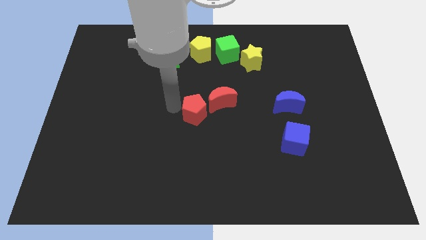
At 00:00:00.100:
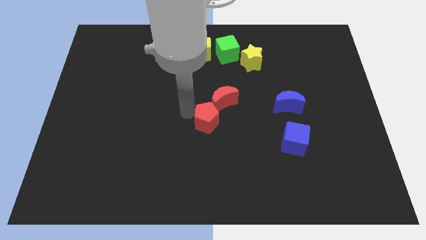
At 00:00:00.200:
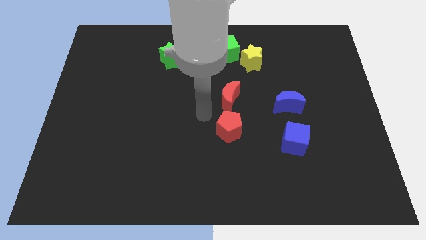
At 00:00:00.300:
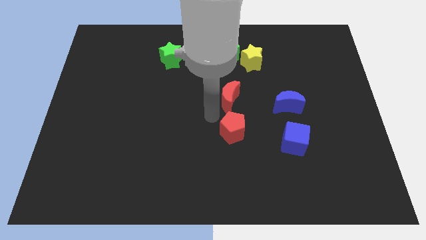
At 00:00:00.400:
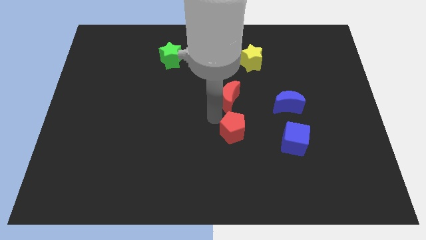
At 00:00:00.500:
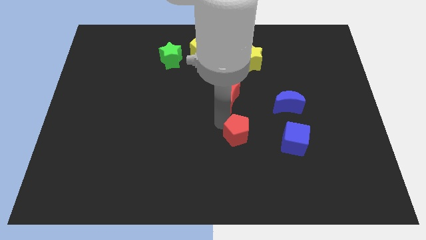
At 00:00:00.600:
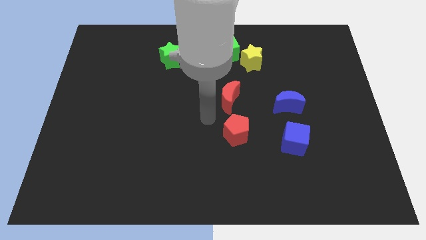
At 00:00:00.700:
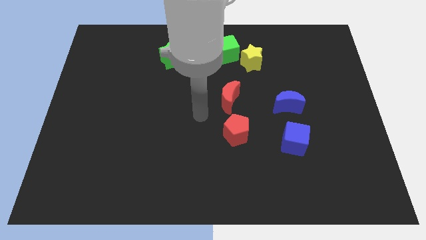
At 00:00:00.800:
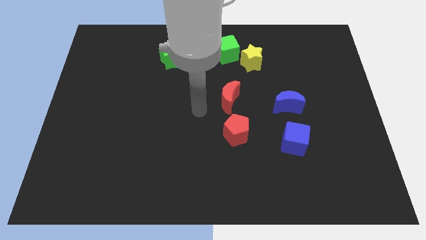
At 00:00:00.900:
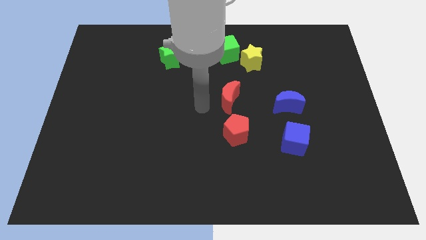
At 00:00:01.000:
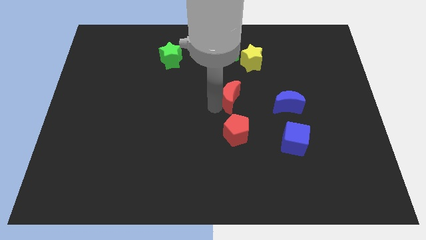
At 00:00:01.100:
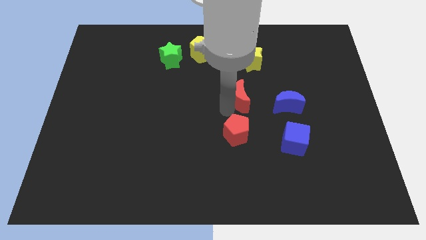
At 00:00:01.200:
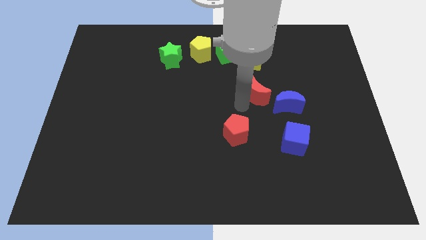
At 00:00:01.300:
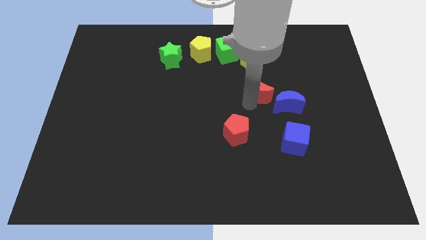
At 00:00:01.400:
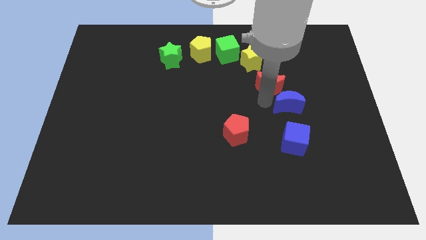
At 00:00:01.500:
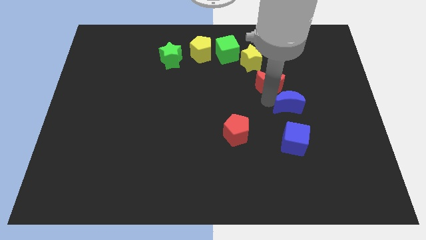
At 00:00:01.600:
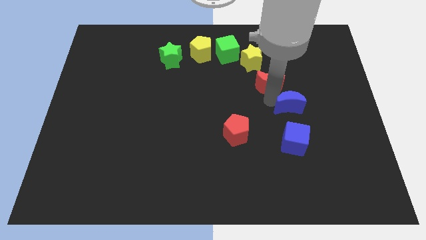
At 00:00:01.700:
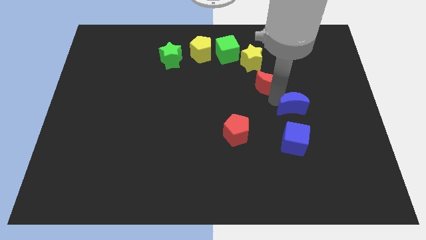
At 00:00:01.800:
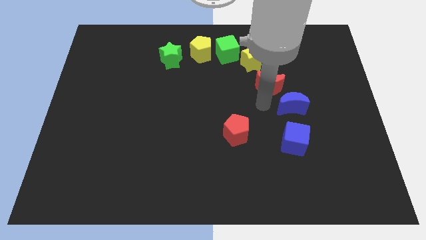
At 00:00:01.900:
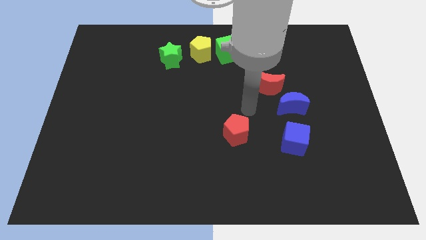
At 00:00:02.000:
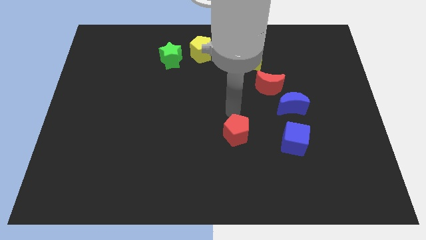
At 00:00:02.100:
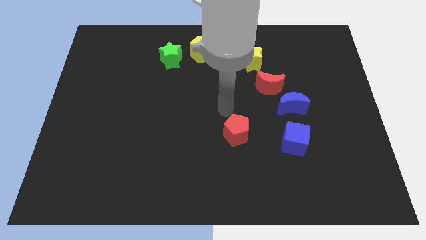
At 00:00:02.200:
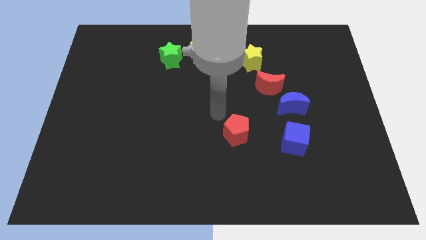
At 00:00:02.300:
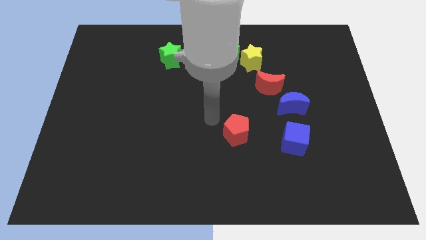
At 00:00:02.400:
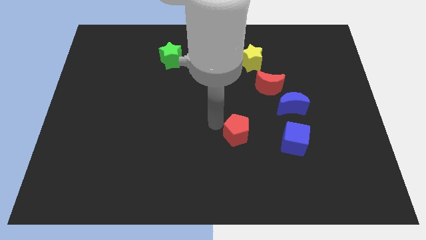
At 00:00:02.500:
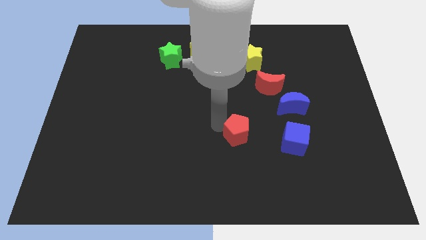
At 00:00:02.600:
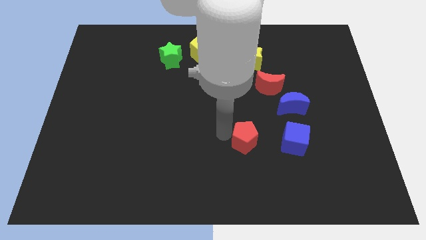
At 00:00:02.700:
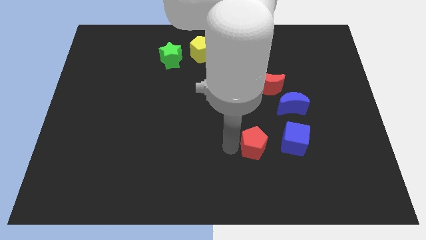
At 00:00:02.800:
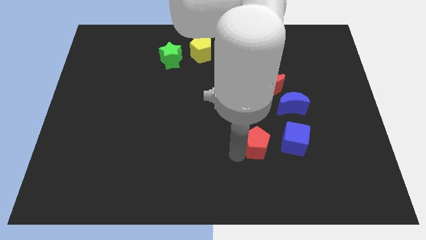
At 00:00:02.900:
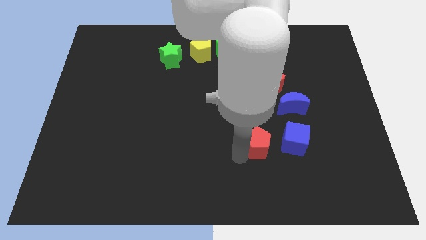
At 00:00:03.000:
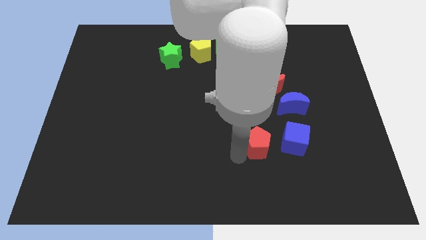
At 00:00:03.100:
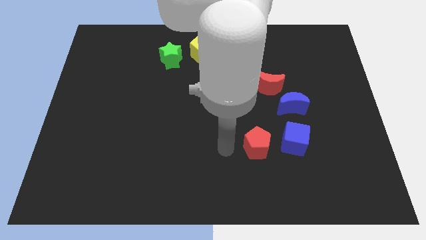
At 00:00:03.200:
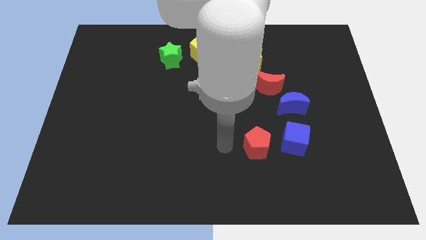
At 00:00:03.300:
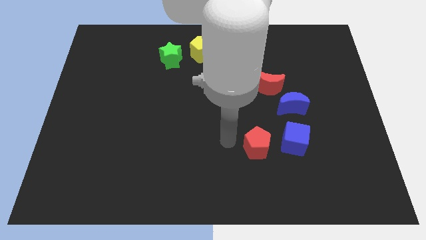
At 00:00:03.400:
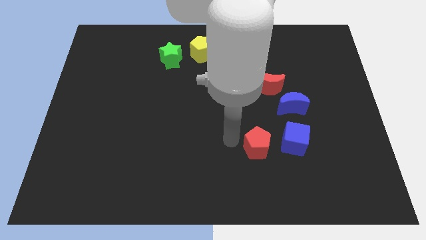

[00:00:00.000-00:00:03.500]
place the red blocks to the either sides of the blue blocks

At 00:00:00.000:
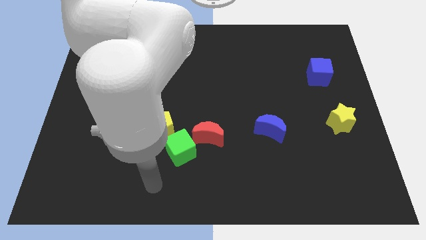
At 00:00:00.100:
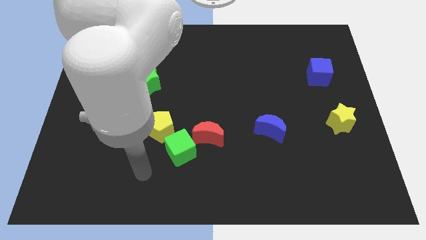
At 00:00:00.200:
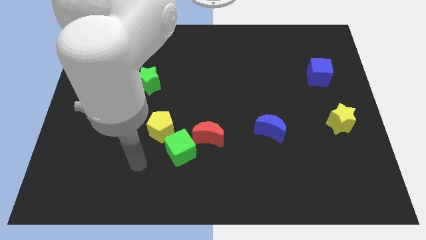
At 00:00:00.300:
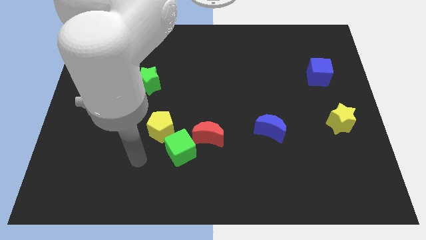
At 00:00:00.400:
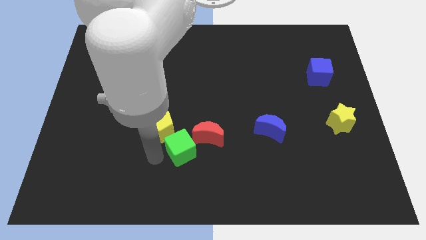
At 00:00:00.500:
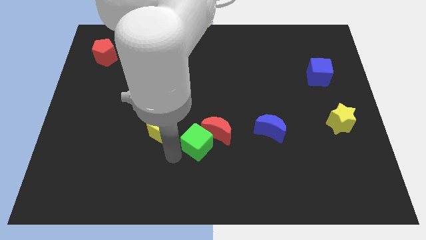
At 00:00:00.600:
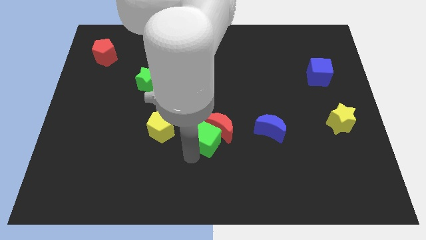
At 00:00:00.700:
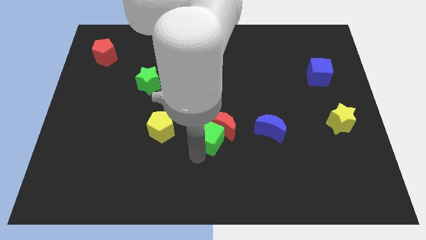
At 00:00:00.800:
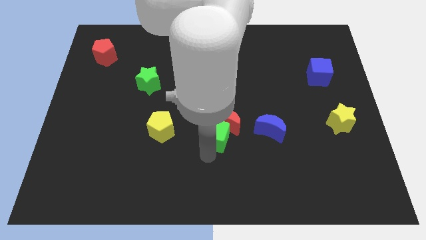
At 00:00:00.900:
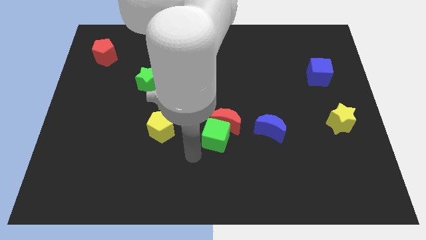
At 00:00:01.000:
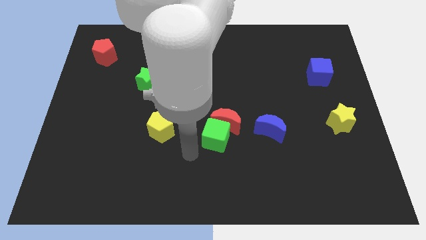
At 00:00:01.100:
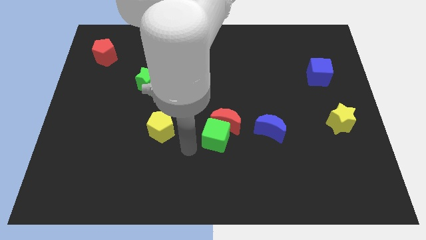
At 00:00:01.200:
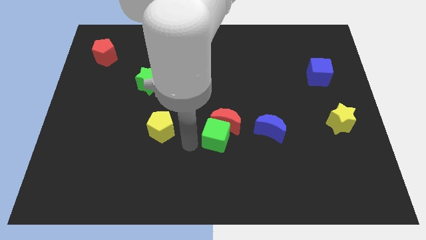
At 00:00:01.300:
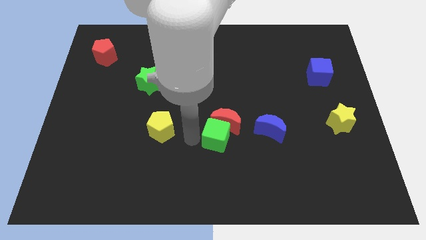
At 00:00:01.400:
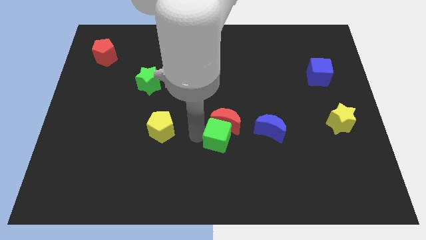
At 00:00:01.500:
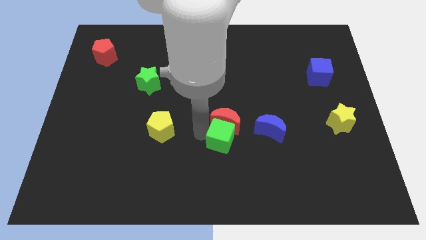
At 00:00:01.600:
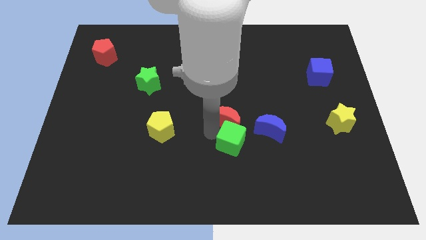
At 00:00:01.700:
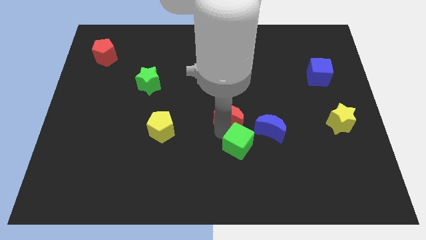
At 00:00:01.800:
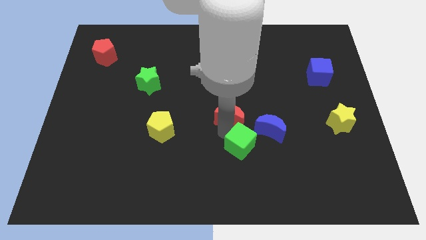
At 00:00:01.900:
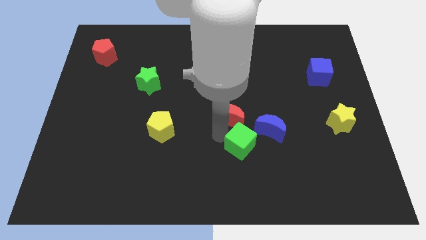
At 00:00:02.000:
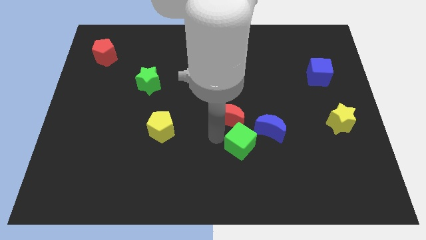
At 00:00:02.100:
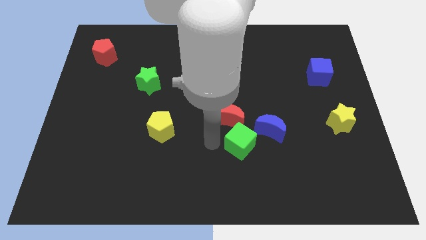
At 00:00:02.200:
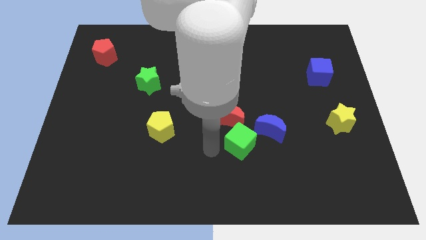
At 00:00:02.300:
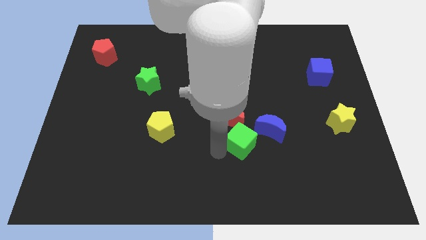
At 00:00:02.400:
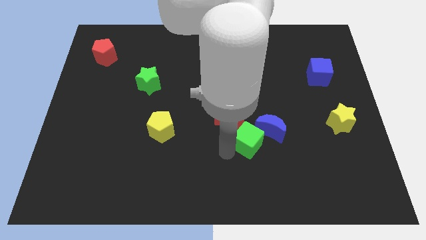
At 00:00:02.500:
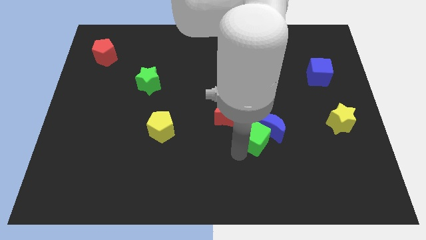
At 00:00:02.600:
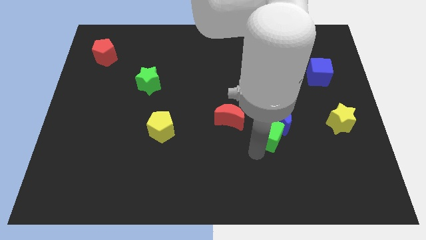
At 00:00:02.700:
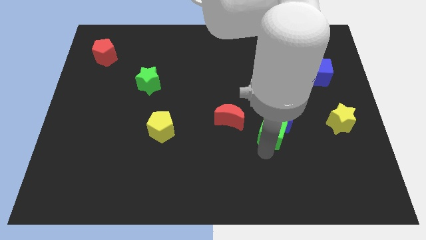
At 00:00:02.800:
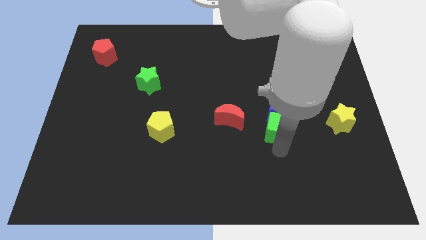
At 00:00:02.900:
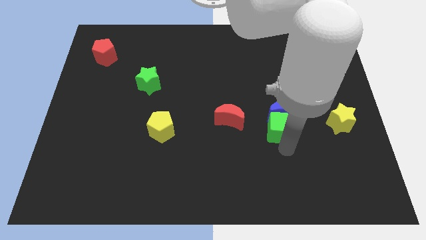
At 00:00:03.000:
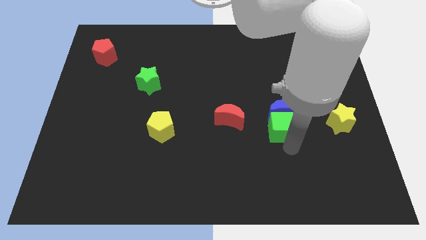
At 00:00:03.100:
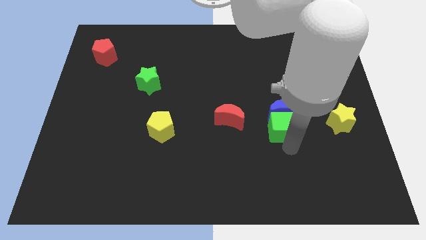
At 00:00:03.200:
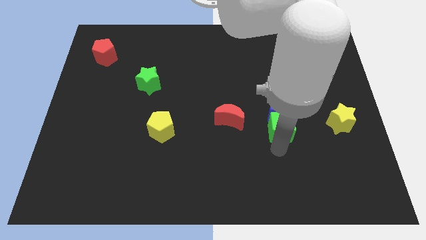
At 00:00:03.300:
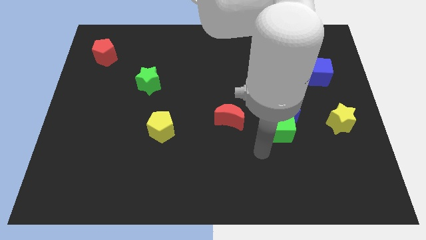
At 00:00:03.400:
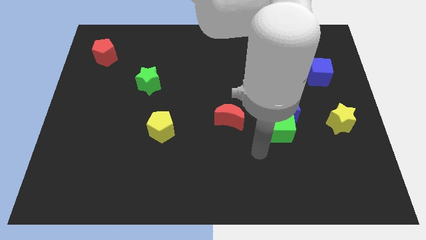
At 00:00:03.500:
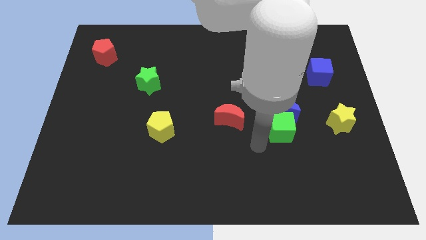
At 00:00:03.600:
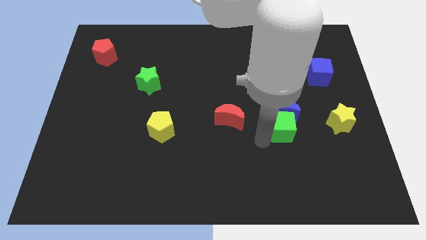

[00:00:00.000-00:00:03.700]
push the green cube into the bottom side of the blue moon

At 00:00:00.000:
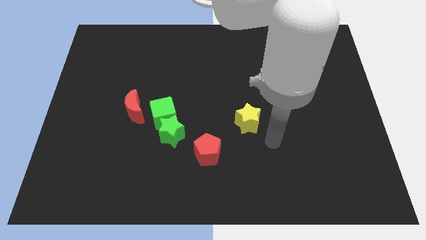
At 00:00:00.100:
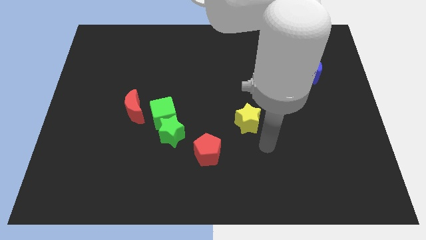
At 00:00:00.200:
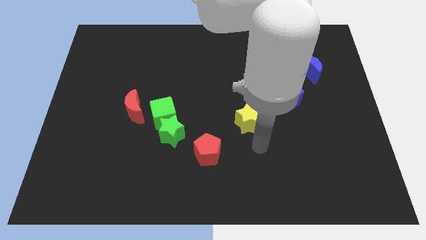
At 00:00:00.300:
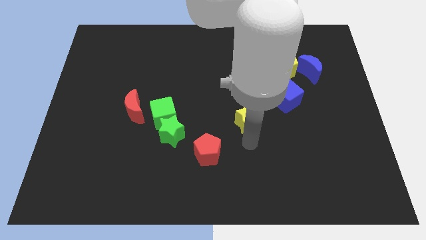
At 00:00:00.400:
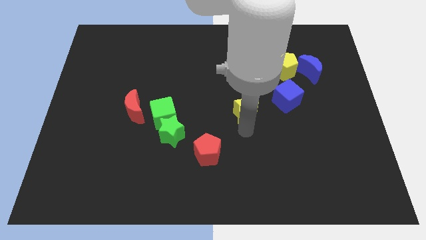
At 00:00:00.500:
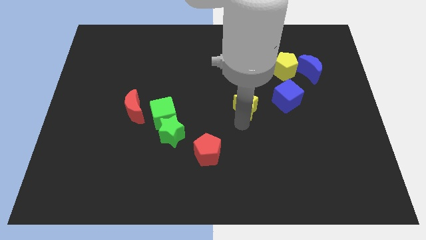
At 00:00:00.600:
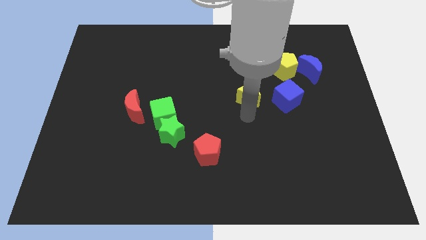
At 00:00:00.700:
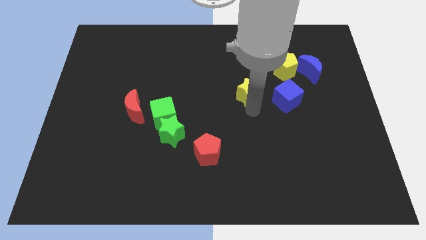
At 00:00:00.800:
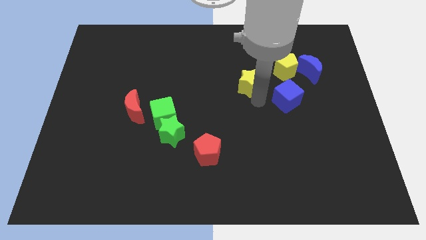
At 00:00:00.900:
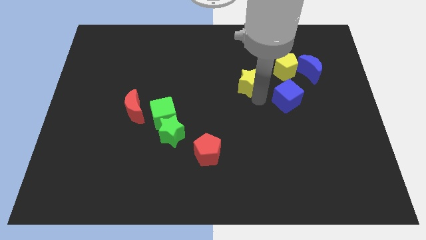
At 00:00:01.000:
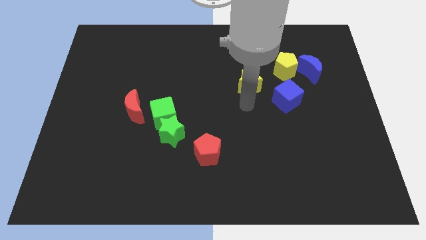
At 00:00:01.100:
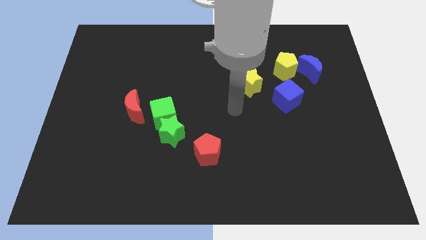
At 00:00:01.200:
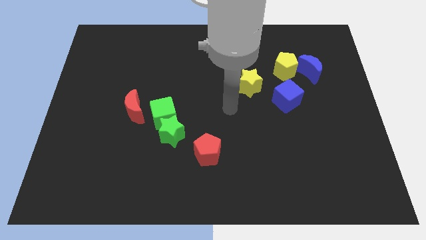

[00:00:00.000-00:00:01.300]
push the yellow star upwards slightly

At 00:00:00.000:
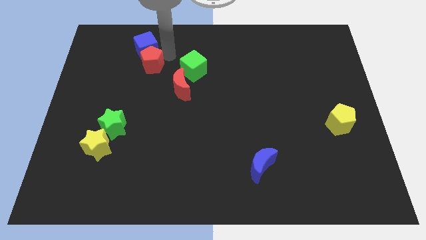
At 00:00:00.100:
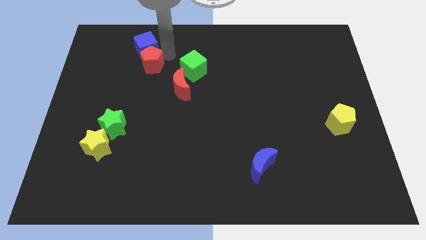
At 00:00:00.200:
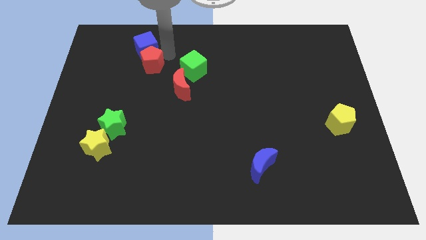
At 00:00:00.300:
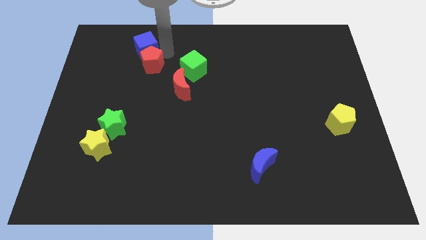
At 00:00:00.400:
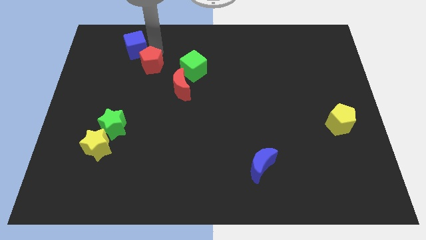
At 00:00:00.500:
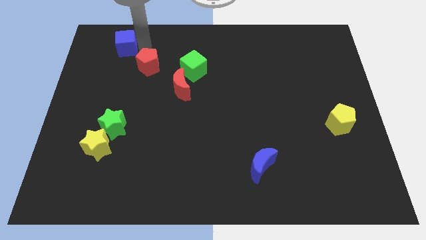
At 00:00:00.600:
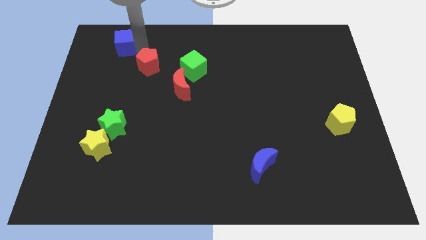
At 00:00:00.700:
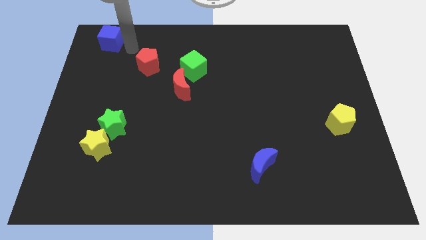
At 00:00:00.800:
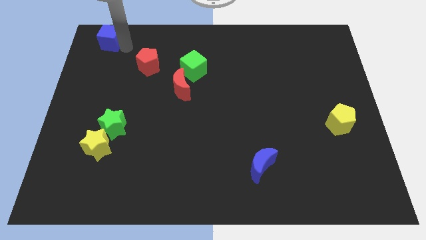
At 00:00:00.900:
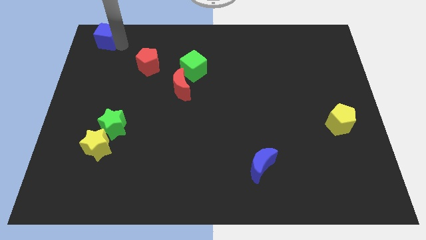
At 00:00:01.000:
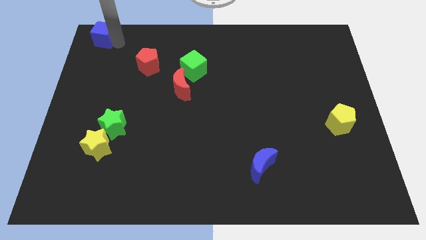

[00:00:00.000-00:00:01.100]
separate the red pentagon and the blue cube
